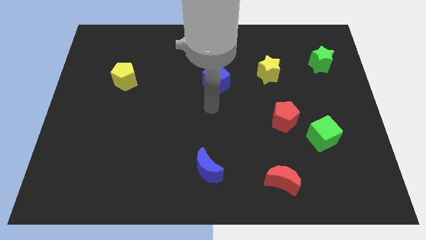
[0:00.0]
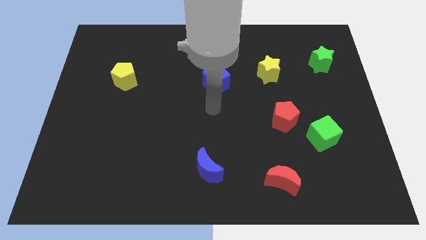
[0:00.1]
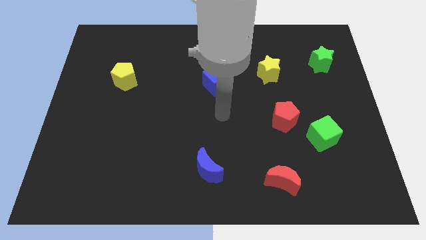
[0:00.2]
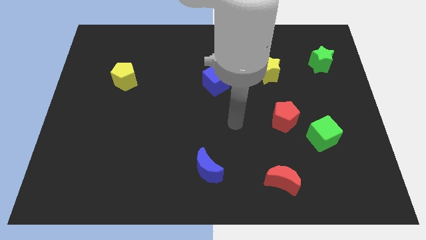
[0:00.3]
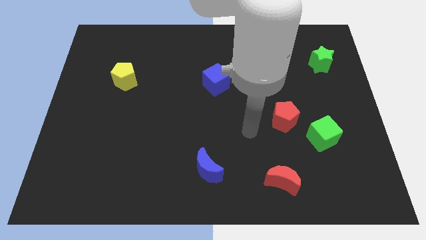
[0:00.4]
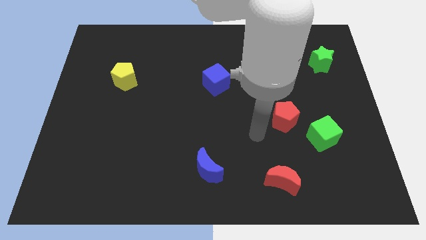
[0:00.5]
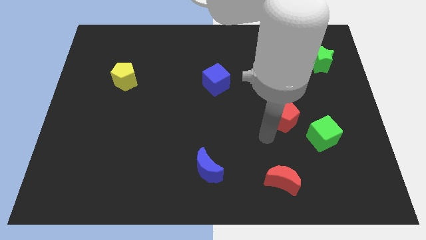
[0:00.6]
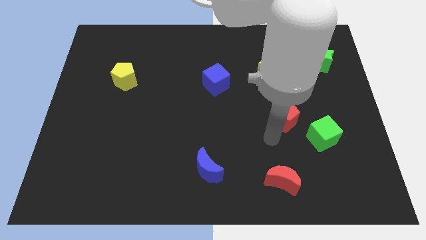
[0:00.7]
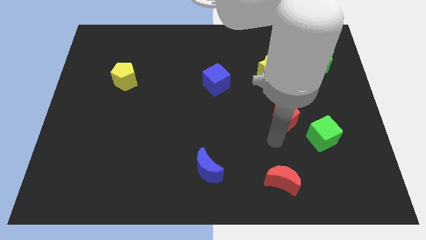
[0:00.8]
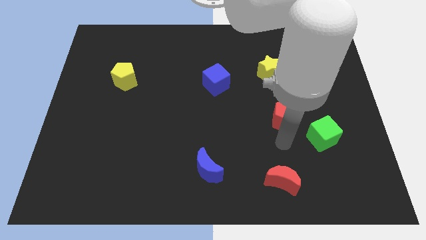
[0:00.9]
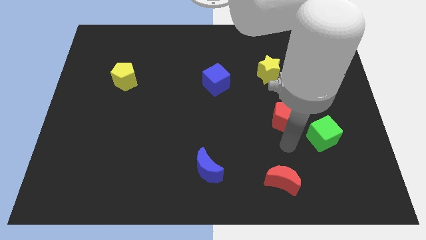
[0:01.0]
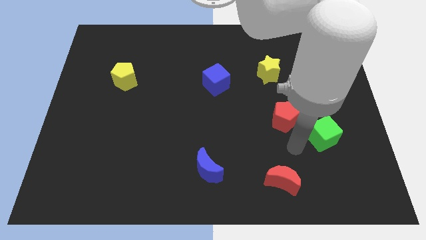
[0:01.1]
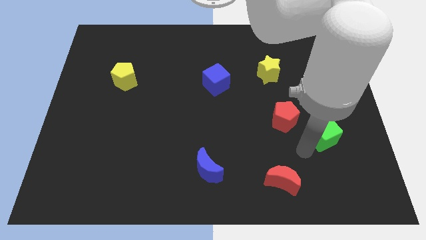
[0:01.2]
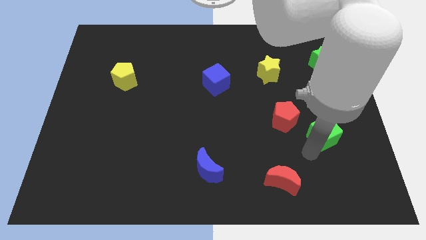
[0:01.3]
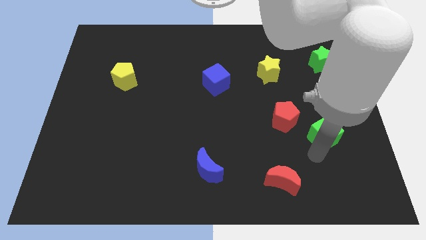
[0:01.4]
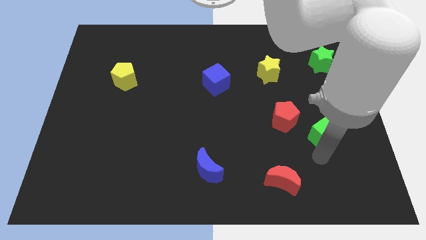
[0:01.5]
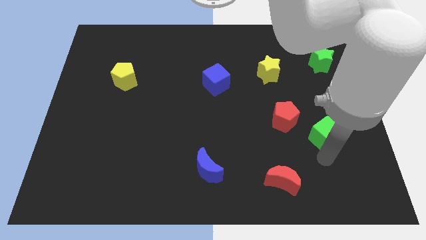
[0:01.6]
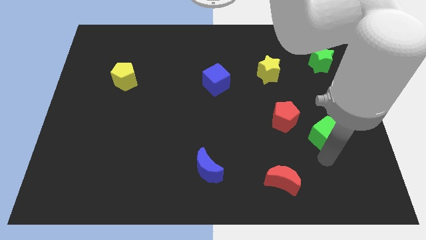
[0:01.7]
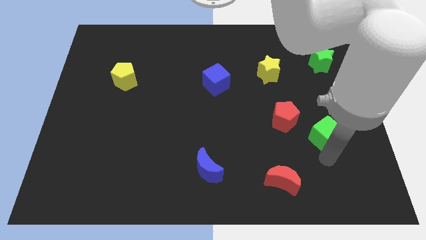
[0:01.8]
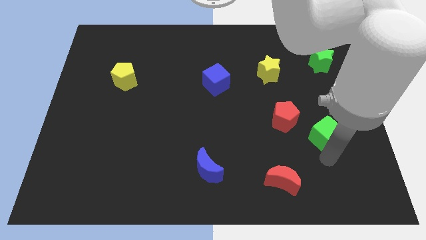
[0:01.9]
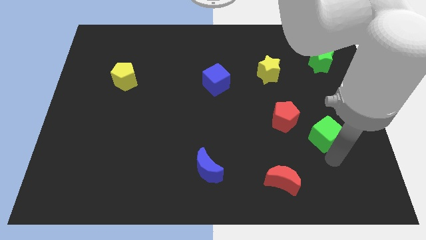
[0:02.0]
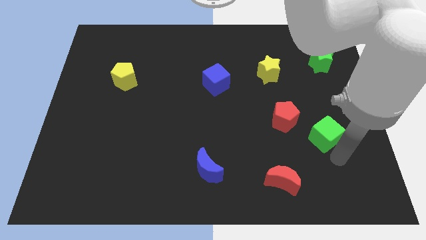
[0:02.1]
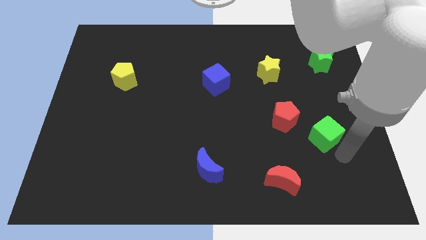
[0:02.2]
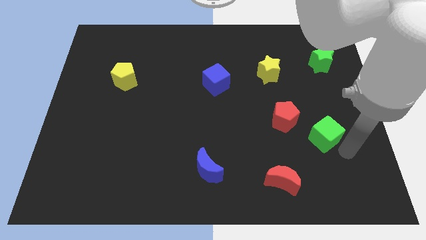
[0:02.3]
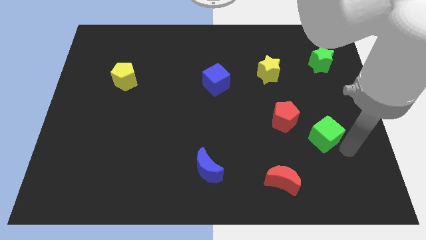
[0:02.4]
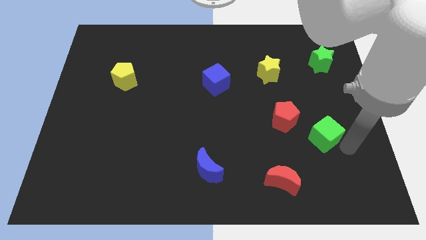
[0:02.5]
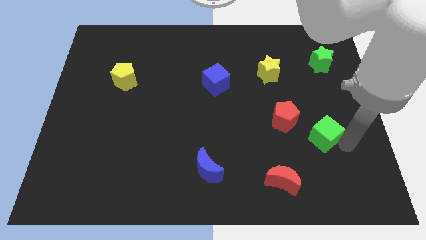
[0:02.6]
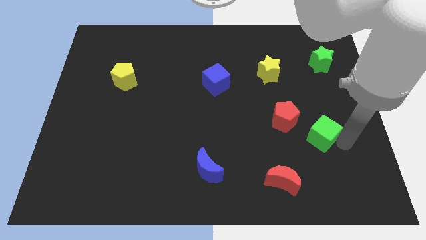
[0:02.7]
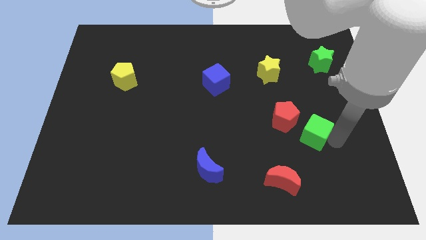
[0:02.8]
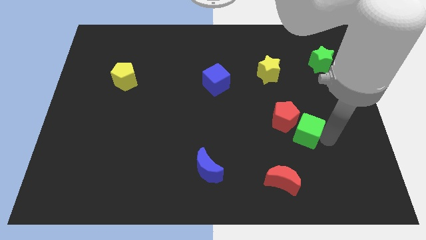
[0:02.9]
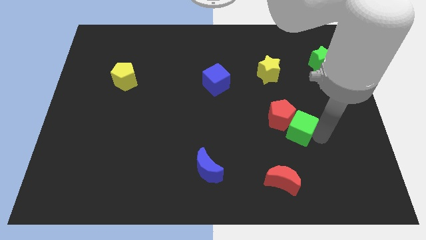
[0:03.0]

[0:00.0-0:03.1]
move green cube into red pentagon

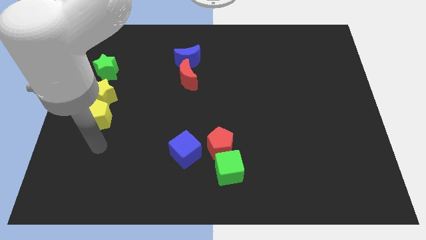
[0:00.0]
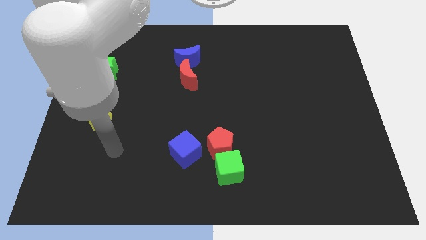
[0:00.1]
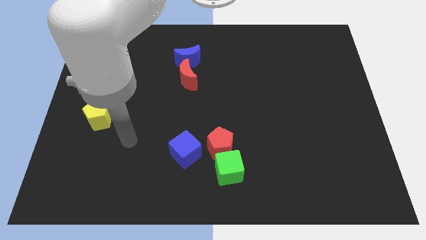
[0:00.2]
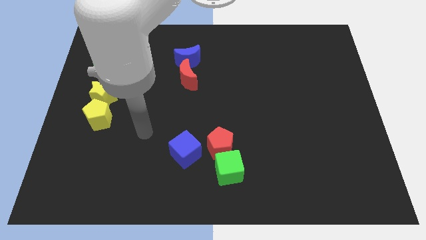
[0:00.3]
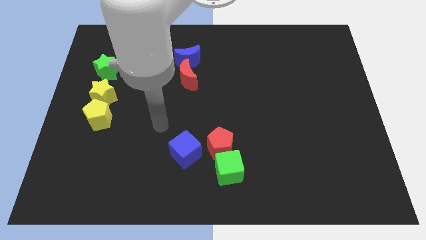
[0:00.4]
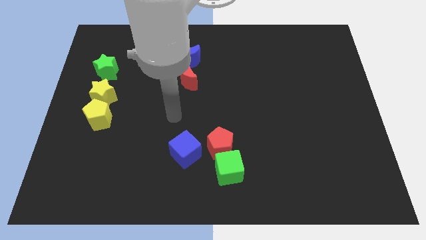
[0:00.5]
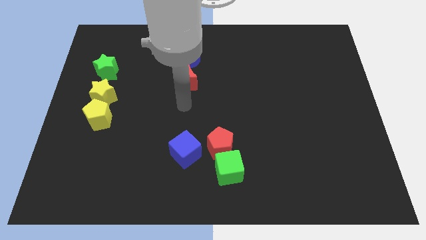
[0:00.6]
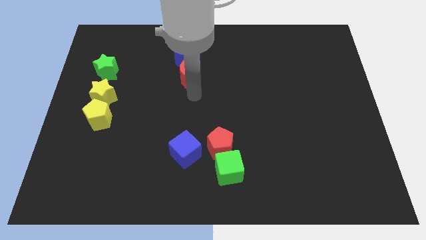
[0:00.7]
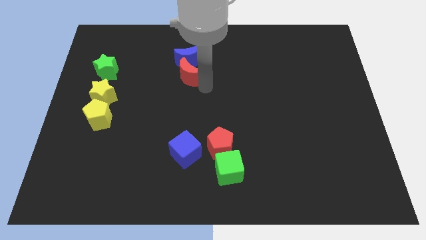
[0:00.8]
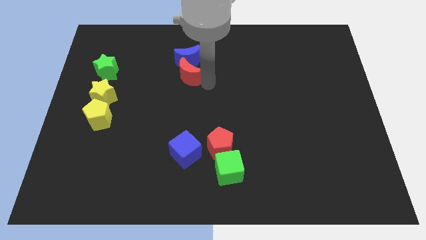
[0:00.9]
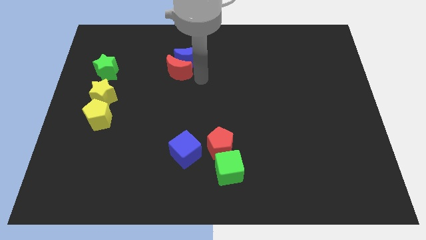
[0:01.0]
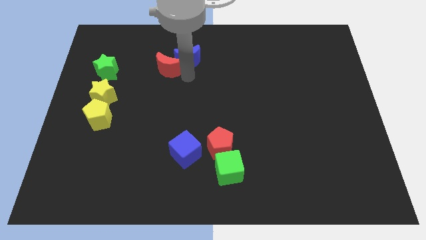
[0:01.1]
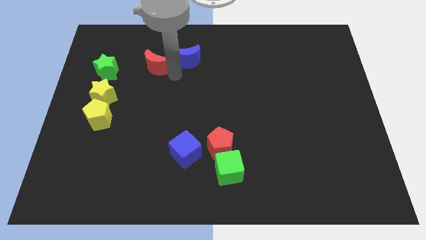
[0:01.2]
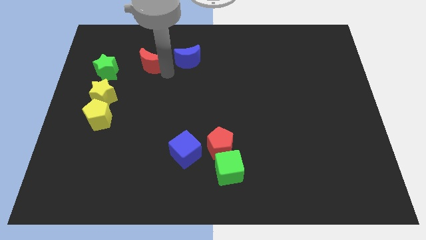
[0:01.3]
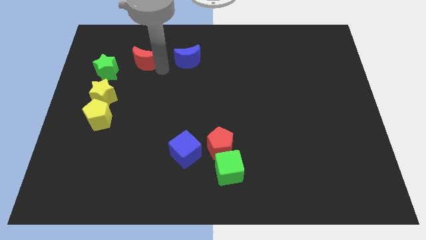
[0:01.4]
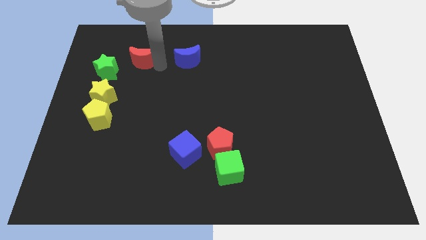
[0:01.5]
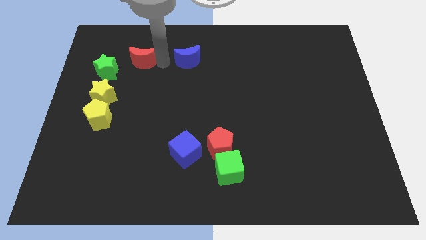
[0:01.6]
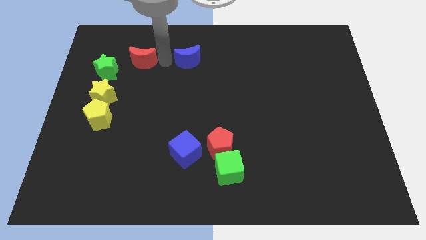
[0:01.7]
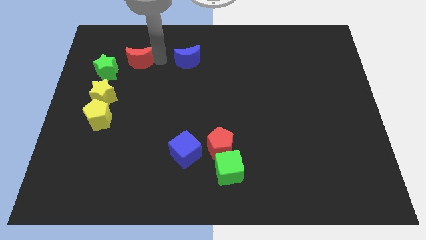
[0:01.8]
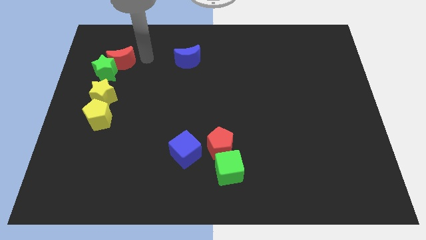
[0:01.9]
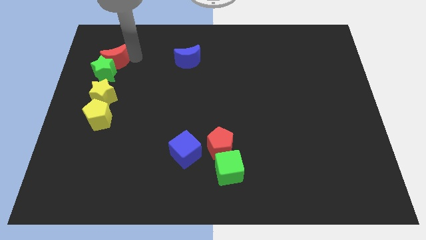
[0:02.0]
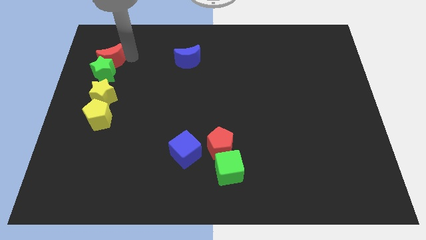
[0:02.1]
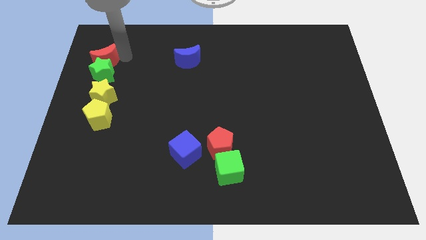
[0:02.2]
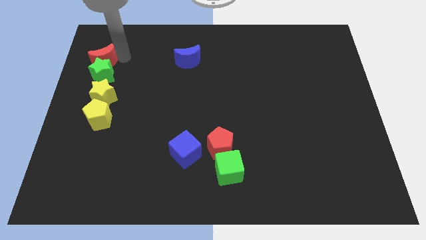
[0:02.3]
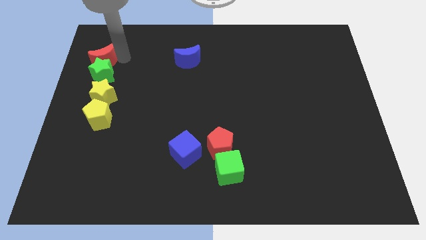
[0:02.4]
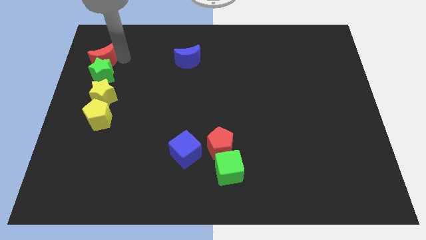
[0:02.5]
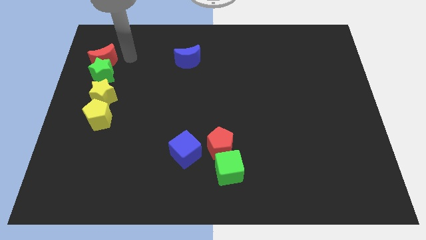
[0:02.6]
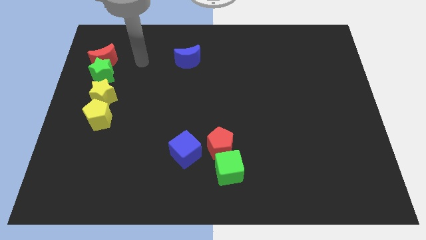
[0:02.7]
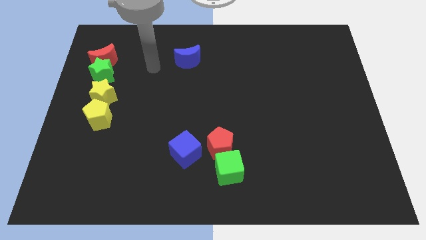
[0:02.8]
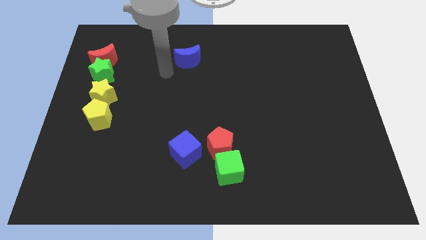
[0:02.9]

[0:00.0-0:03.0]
slide the red crescent above the green star

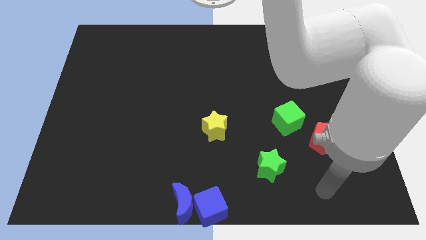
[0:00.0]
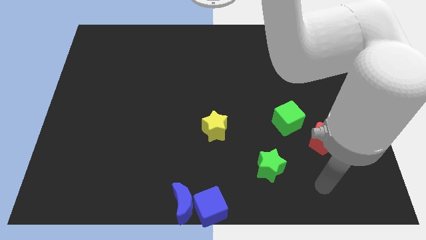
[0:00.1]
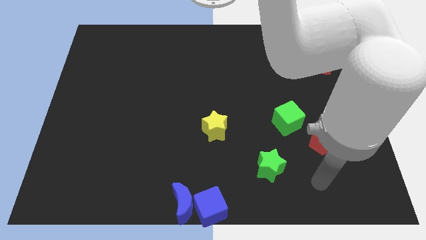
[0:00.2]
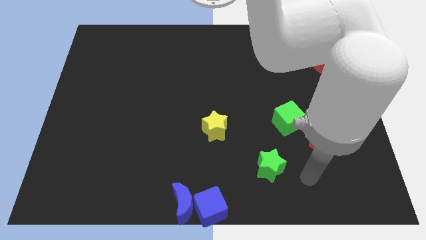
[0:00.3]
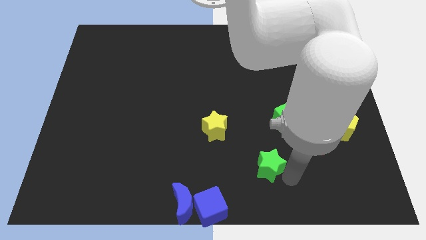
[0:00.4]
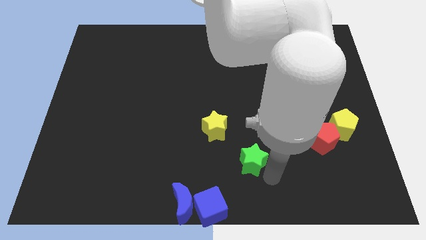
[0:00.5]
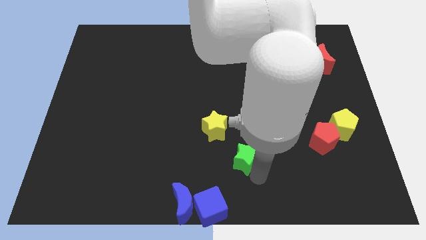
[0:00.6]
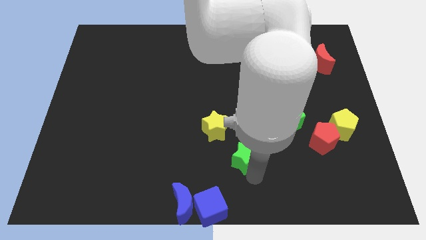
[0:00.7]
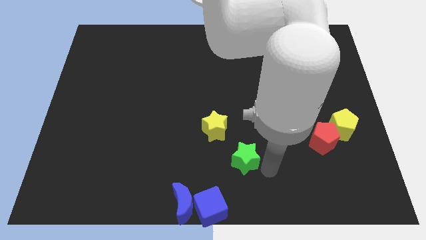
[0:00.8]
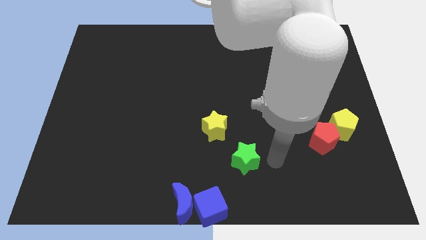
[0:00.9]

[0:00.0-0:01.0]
push the green star towards the yellow star

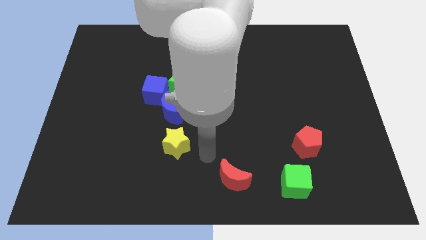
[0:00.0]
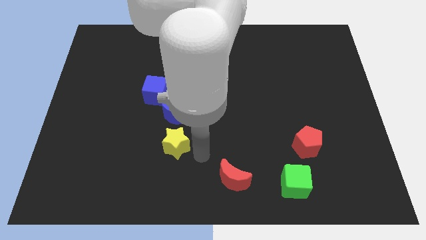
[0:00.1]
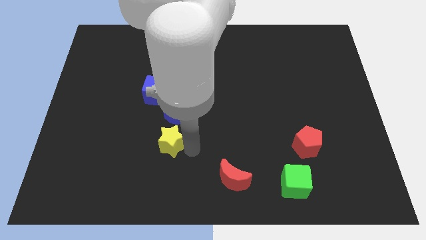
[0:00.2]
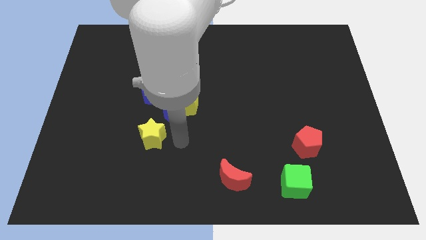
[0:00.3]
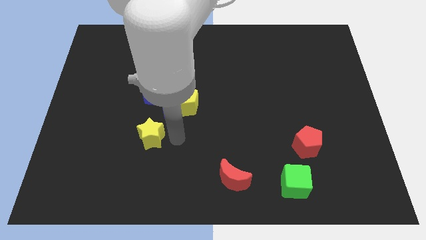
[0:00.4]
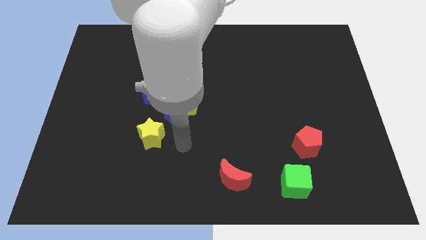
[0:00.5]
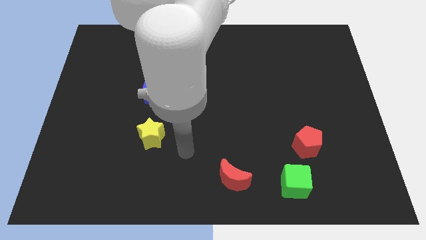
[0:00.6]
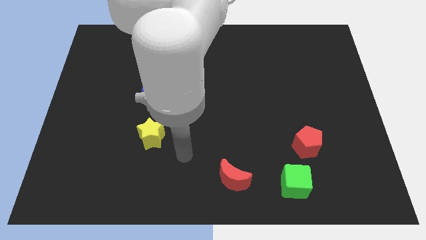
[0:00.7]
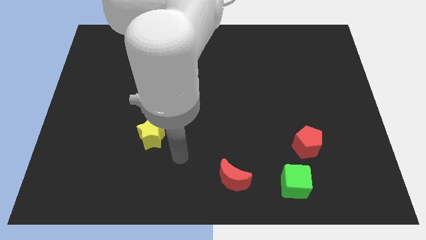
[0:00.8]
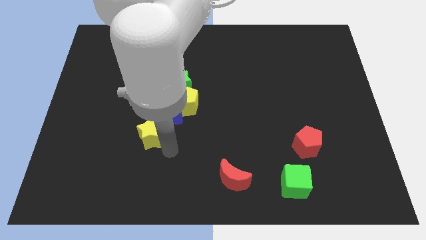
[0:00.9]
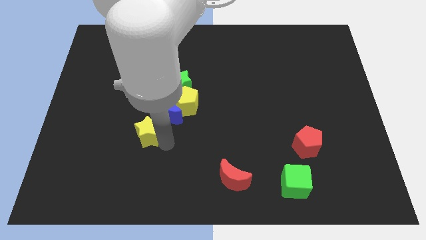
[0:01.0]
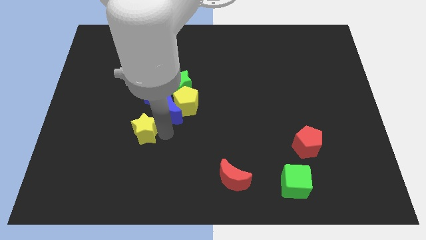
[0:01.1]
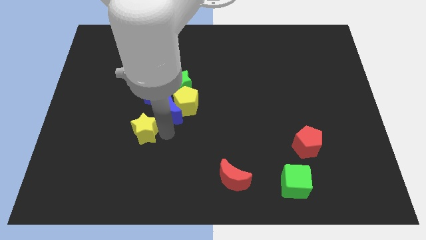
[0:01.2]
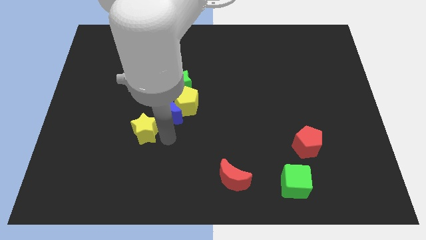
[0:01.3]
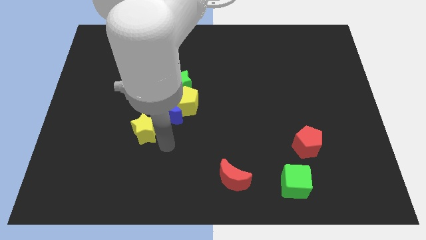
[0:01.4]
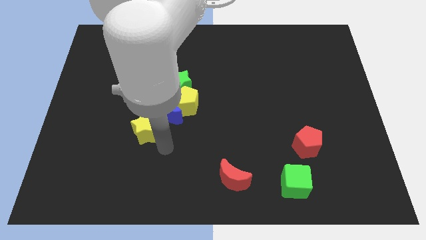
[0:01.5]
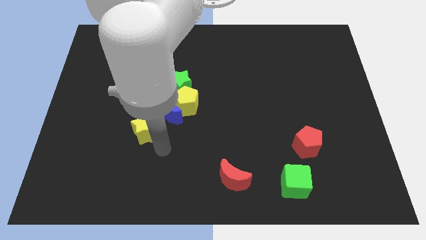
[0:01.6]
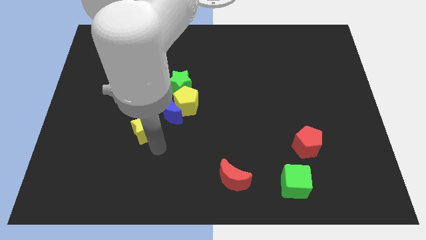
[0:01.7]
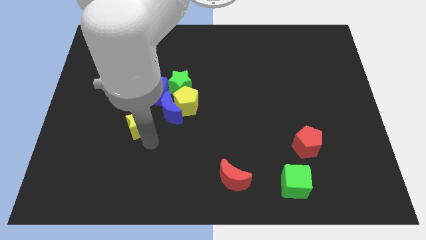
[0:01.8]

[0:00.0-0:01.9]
place the yellow pentagon bottom left side to the blue moon
